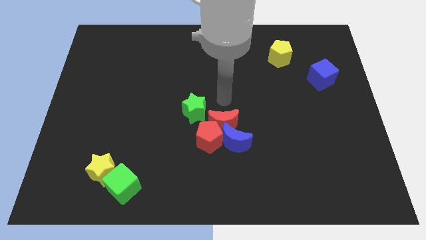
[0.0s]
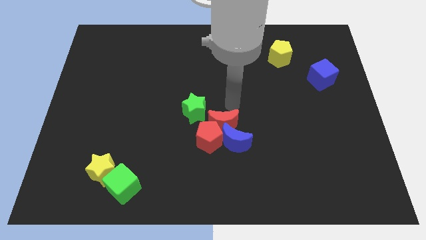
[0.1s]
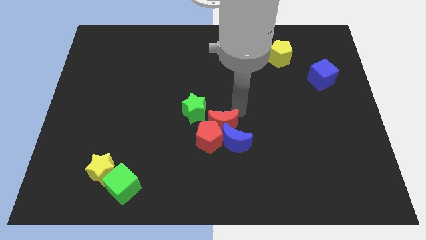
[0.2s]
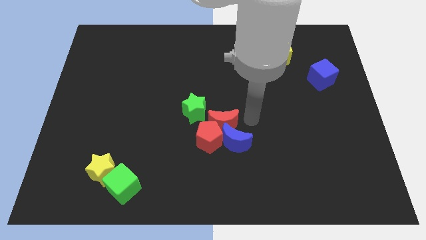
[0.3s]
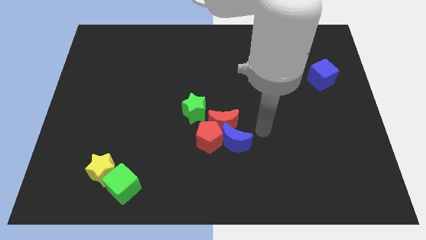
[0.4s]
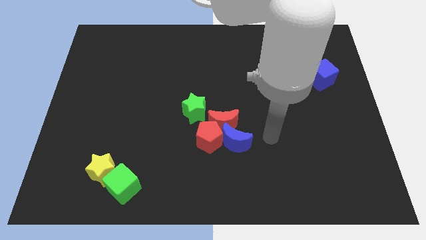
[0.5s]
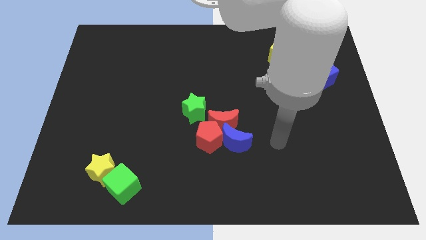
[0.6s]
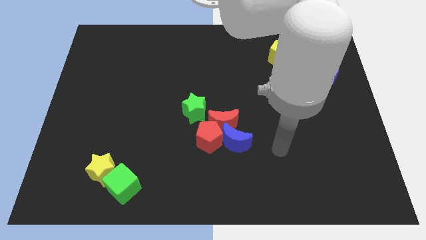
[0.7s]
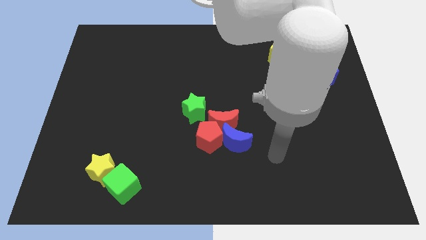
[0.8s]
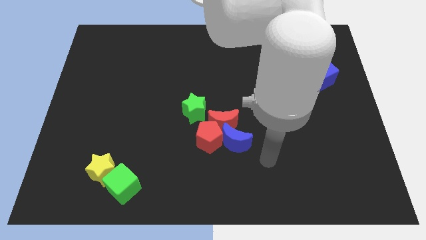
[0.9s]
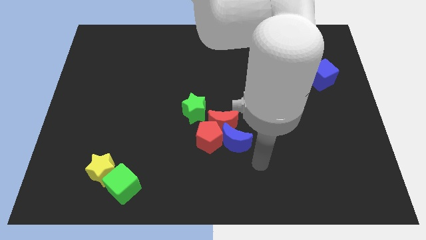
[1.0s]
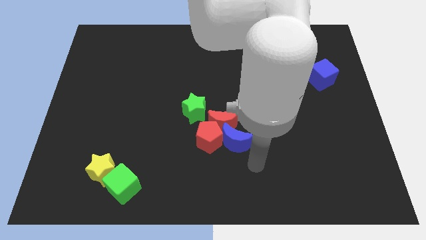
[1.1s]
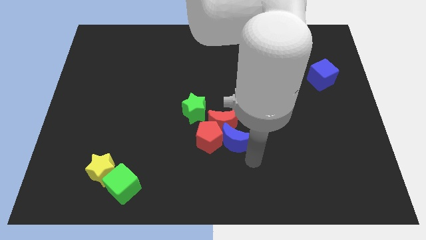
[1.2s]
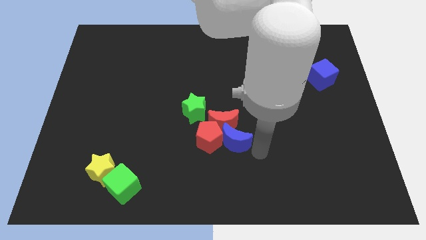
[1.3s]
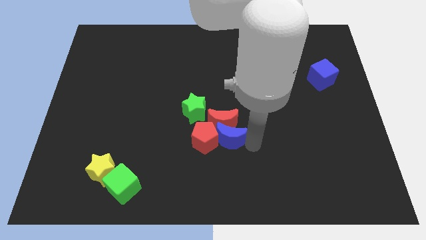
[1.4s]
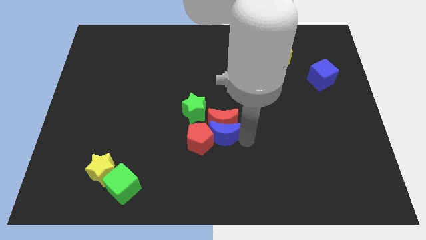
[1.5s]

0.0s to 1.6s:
place the blue crescent towards the down side of the red crescent

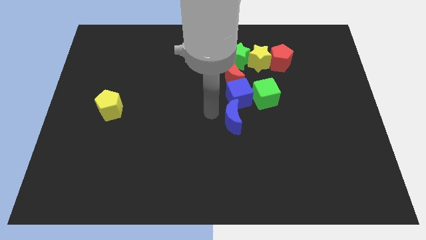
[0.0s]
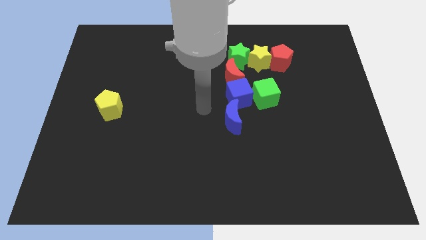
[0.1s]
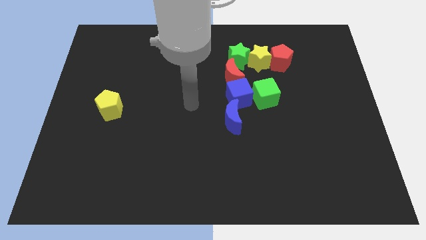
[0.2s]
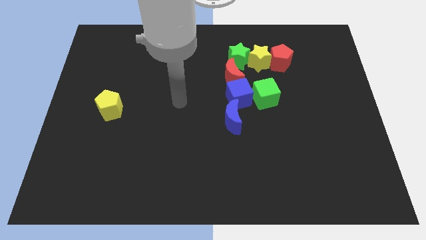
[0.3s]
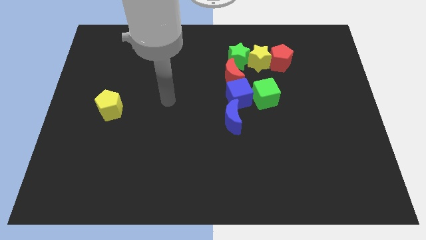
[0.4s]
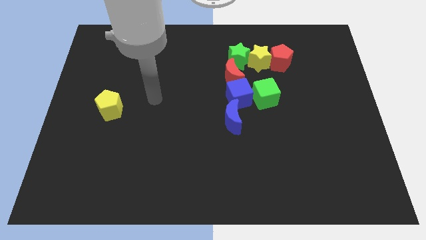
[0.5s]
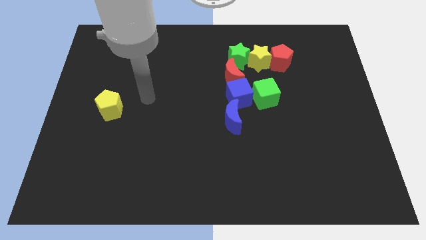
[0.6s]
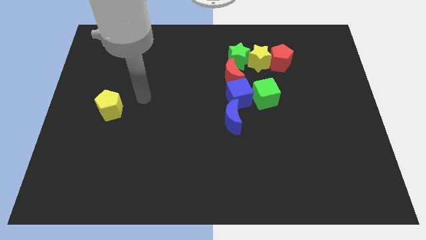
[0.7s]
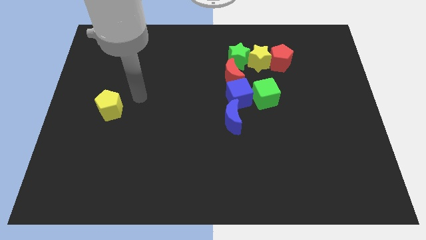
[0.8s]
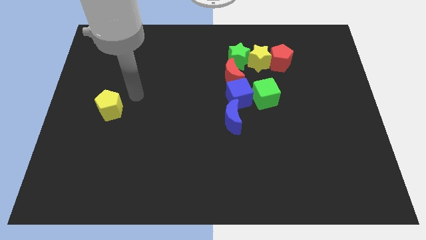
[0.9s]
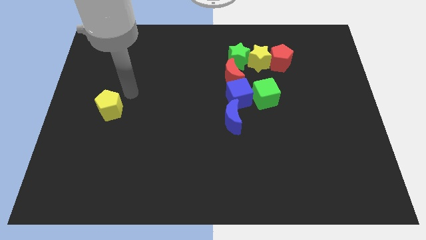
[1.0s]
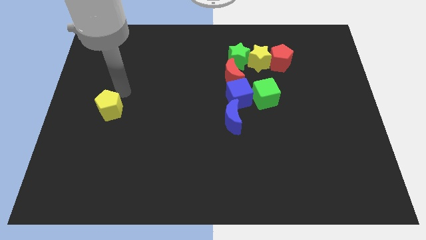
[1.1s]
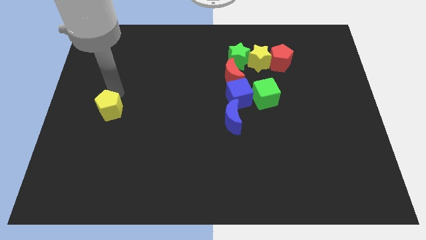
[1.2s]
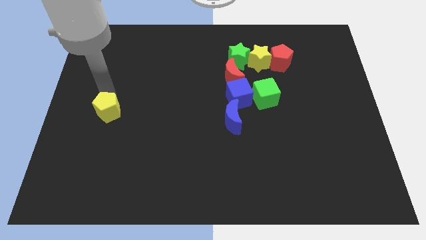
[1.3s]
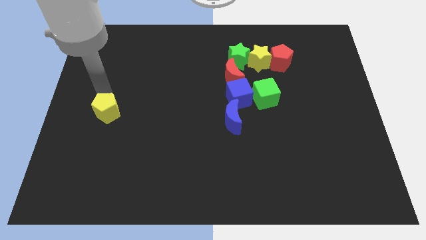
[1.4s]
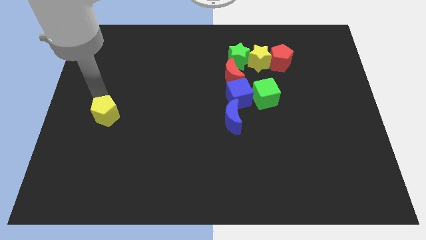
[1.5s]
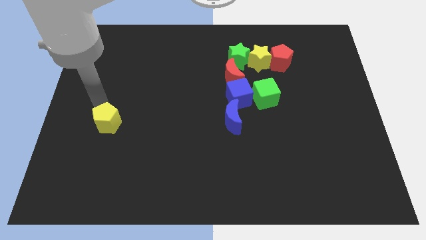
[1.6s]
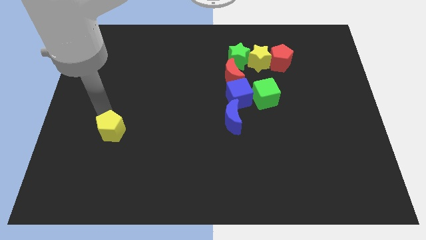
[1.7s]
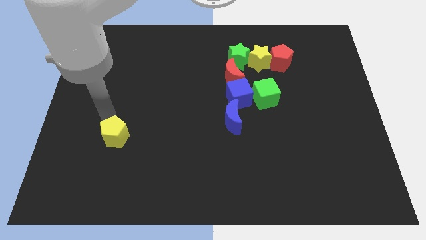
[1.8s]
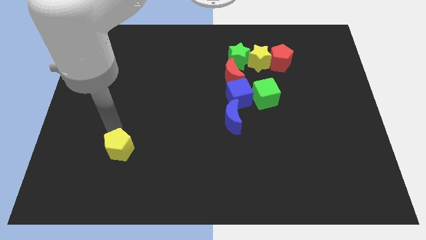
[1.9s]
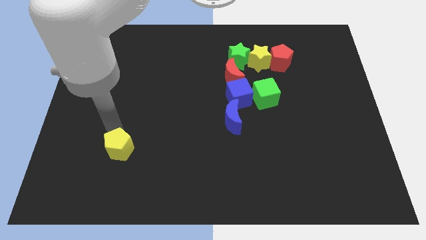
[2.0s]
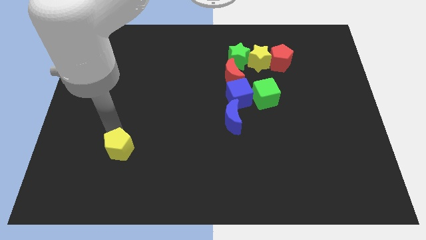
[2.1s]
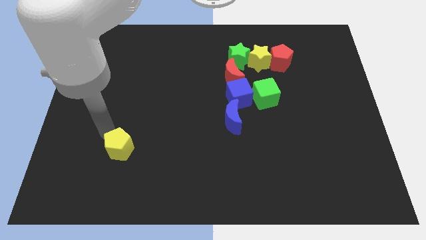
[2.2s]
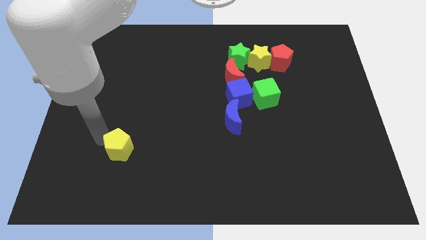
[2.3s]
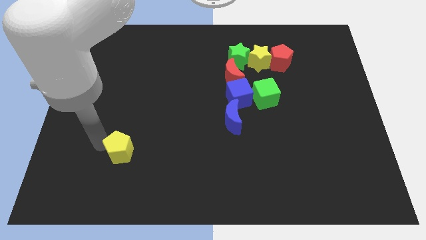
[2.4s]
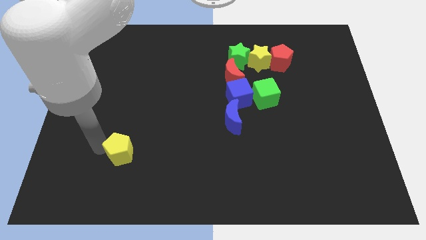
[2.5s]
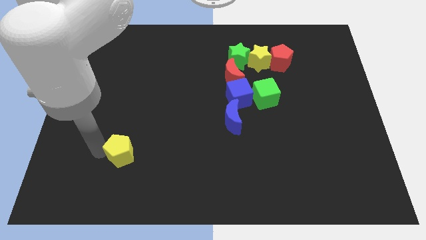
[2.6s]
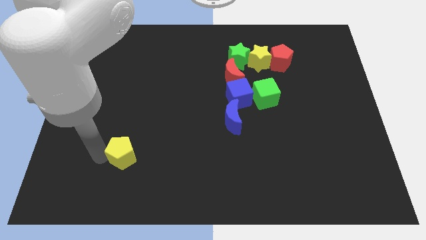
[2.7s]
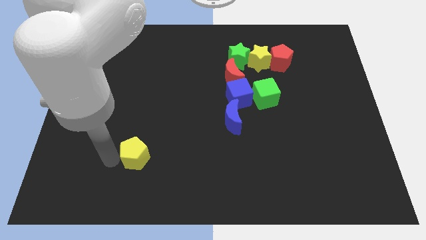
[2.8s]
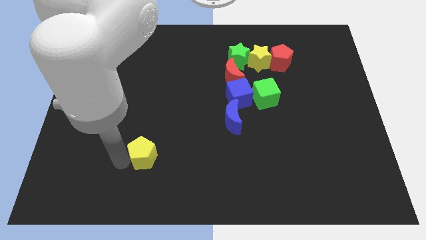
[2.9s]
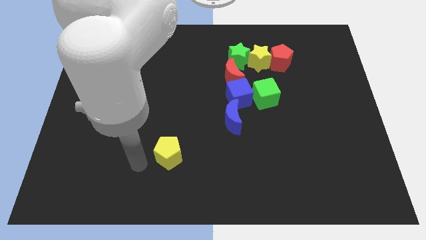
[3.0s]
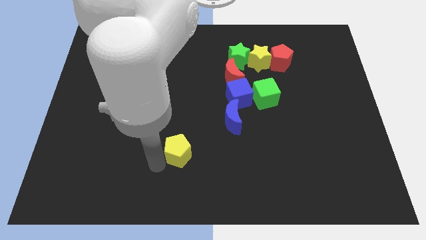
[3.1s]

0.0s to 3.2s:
move the yellow pentagon left bottom diagonally to the blue crescent

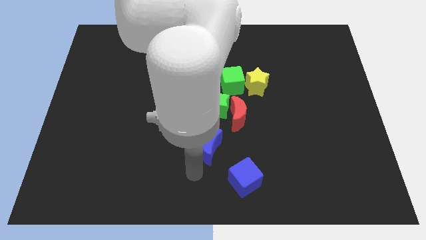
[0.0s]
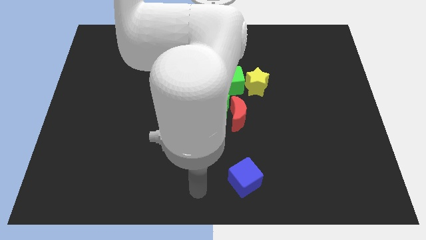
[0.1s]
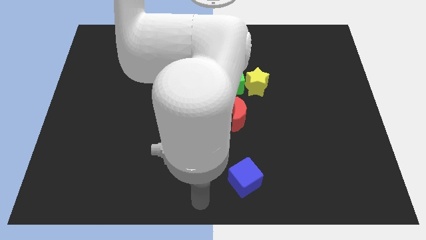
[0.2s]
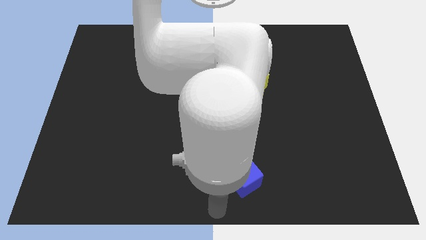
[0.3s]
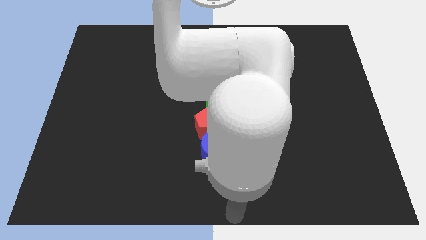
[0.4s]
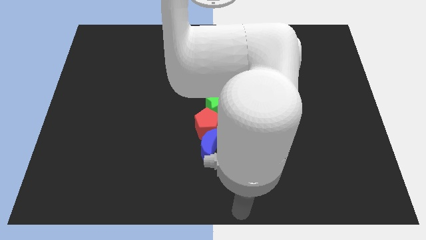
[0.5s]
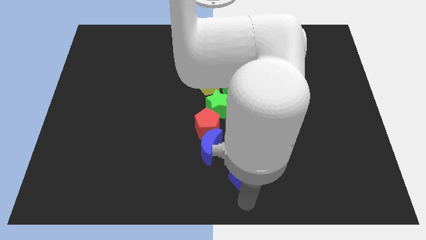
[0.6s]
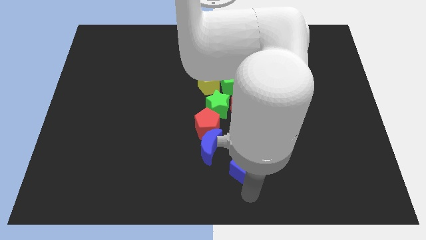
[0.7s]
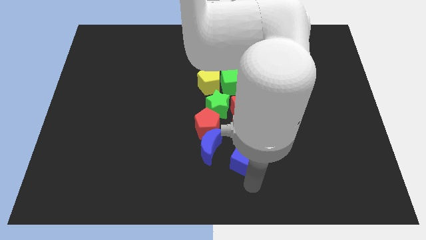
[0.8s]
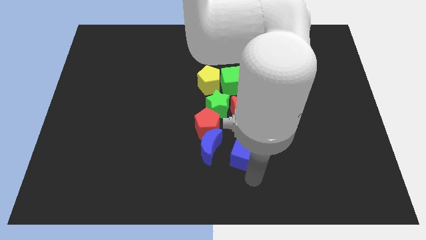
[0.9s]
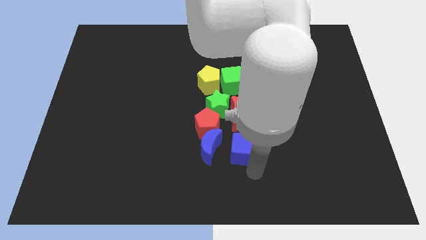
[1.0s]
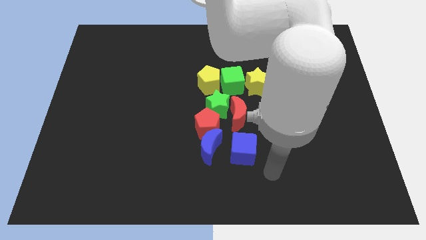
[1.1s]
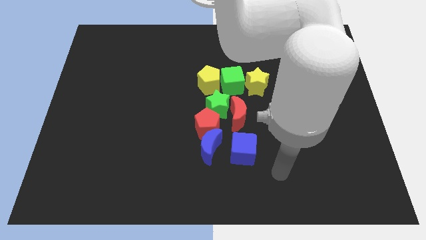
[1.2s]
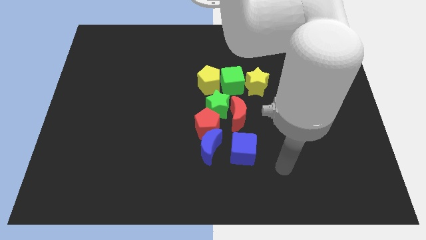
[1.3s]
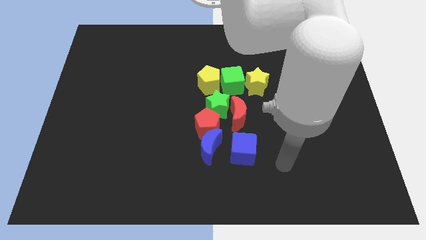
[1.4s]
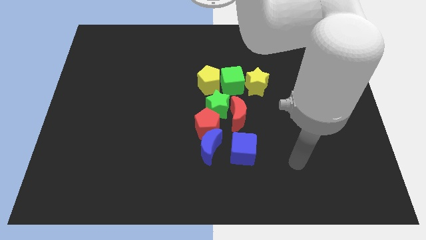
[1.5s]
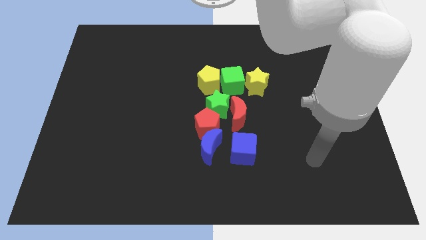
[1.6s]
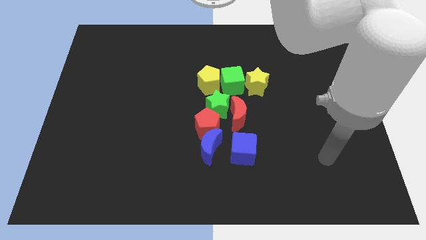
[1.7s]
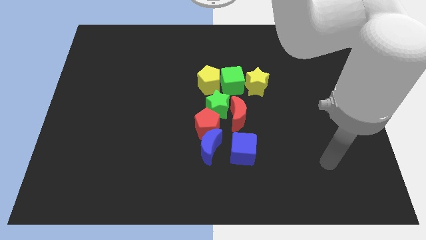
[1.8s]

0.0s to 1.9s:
place the blue cube to the right of the blue moon

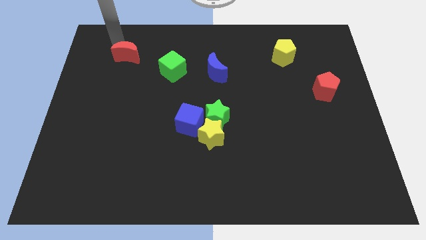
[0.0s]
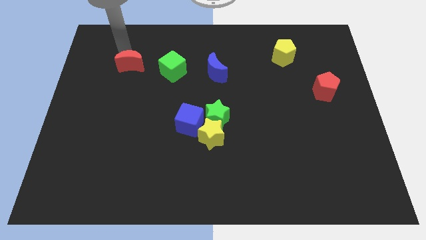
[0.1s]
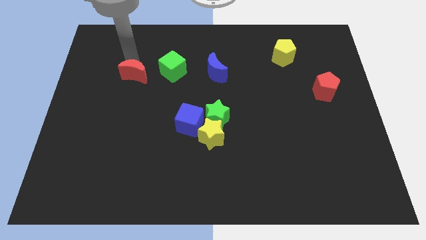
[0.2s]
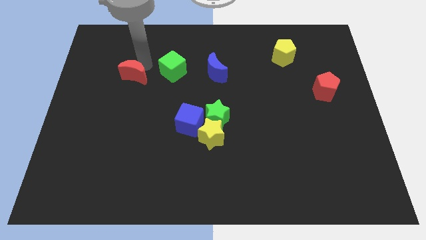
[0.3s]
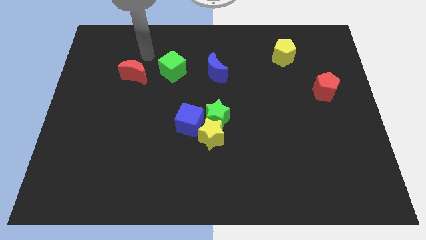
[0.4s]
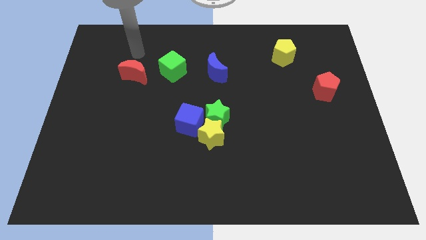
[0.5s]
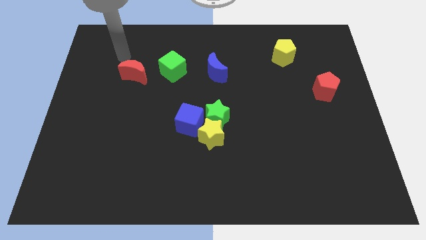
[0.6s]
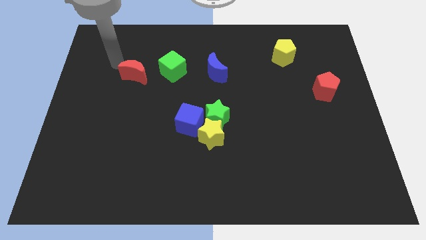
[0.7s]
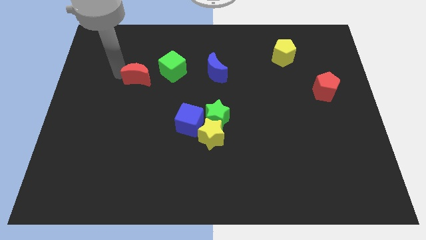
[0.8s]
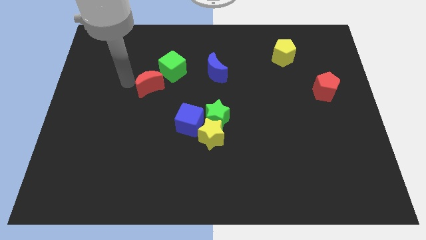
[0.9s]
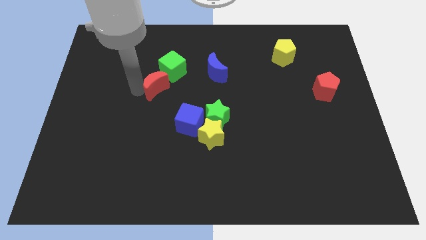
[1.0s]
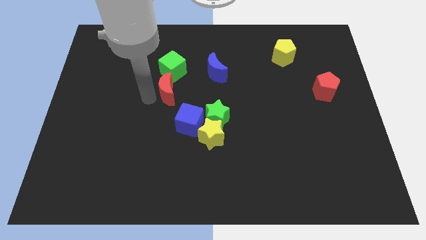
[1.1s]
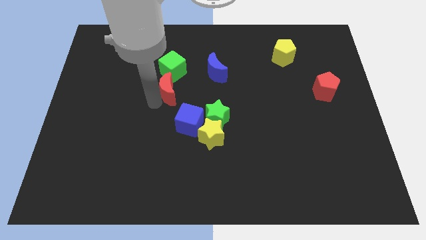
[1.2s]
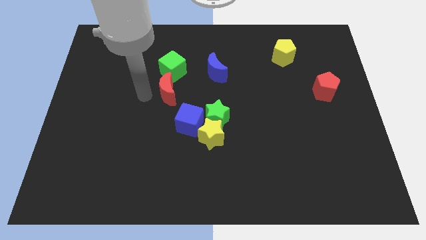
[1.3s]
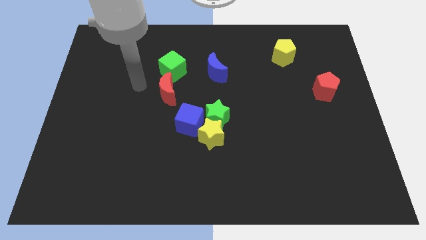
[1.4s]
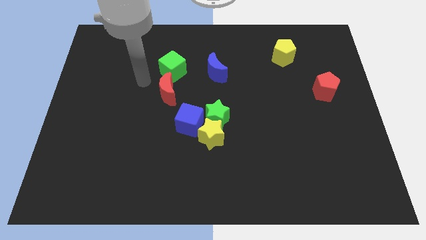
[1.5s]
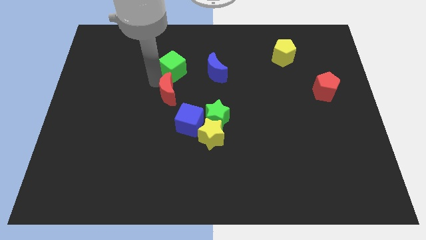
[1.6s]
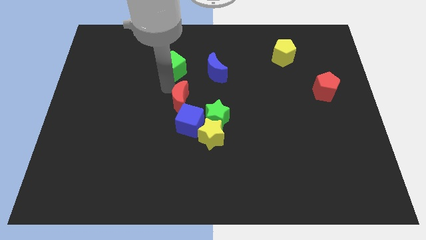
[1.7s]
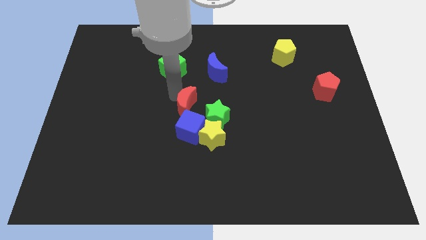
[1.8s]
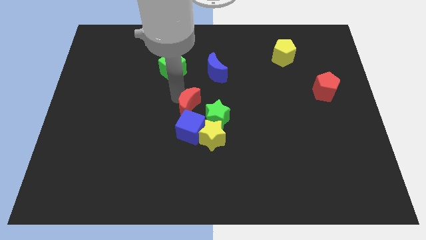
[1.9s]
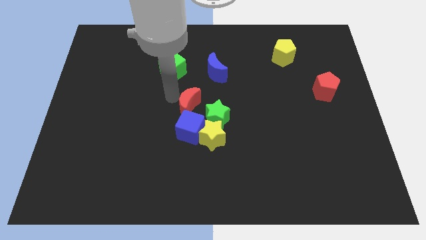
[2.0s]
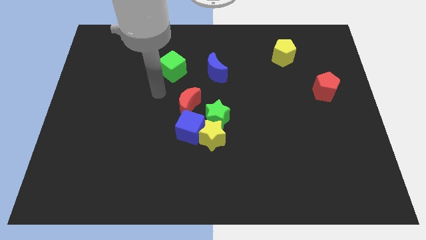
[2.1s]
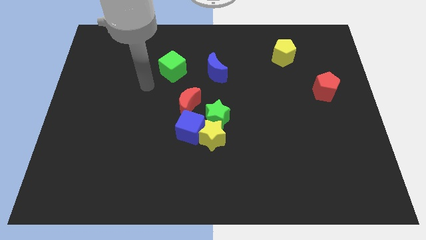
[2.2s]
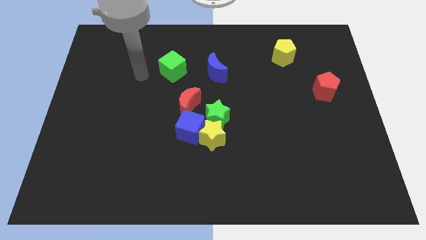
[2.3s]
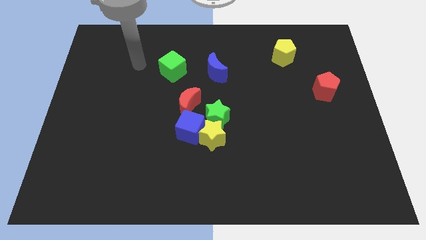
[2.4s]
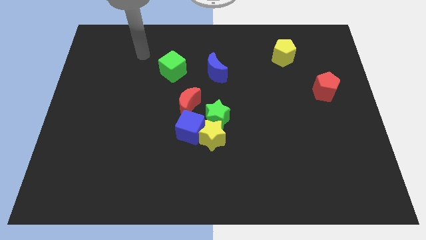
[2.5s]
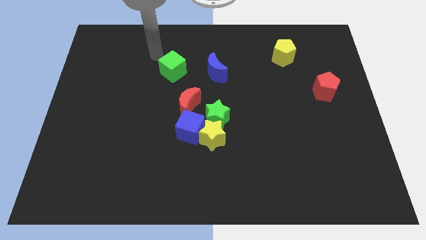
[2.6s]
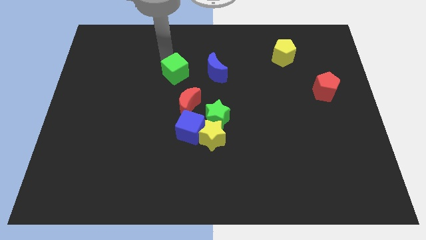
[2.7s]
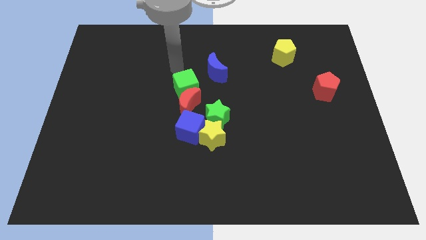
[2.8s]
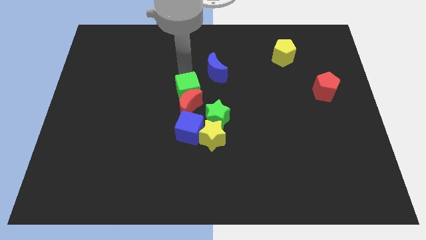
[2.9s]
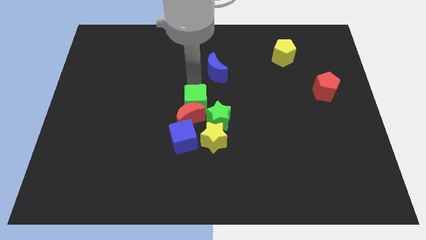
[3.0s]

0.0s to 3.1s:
place green cube above to the red crescent
